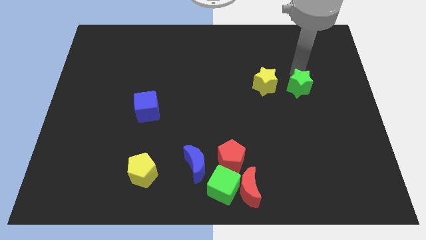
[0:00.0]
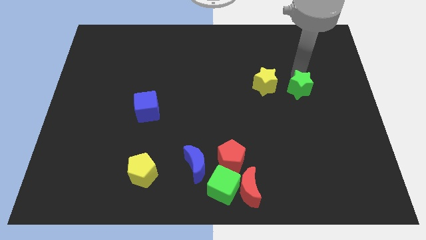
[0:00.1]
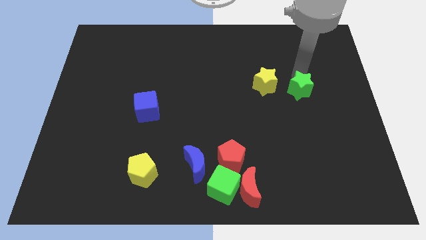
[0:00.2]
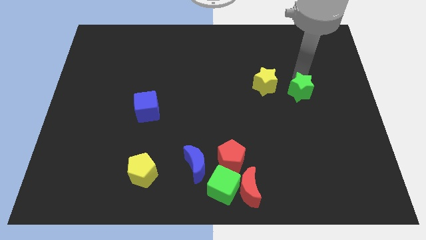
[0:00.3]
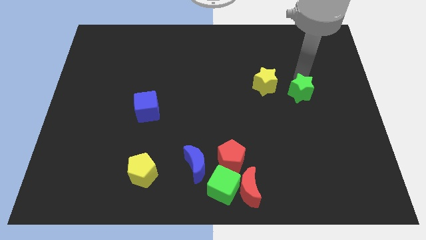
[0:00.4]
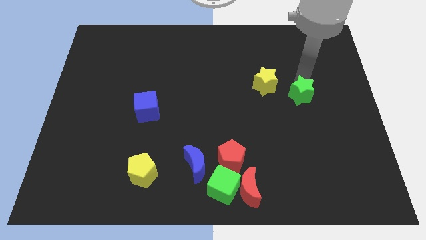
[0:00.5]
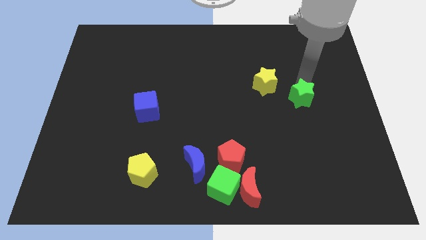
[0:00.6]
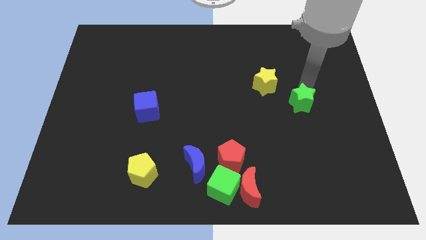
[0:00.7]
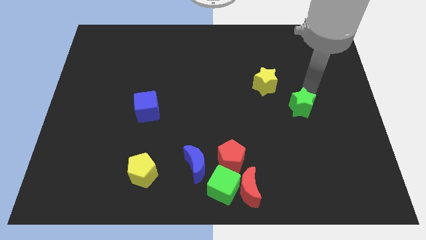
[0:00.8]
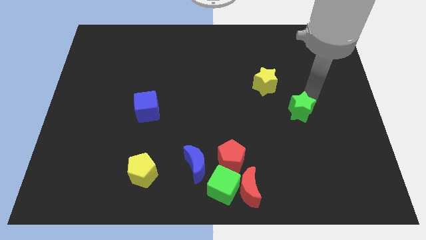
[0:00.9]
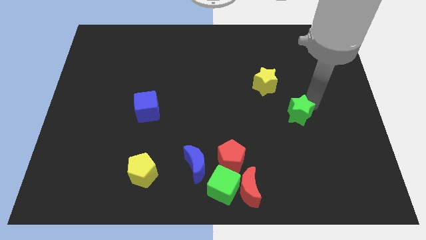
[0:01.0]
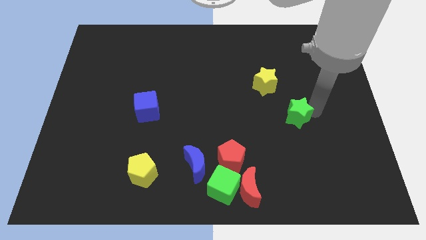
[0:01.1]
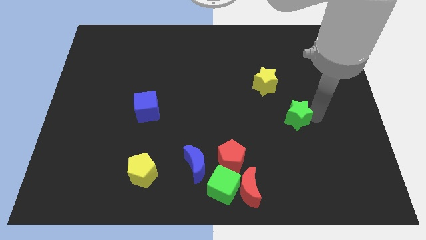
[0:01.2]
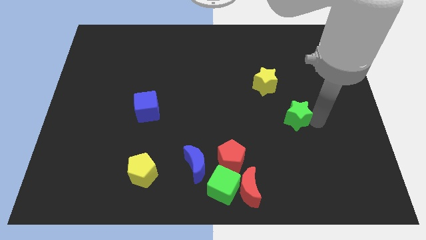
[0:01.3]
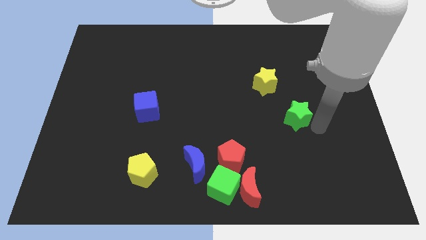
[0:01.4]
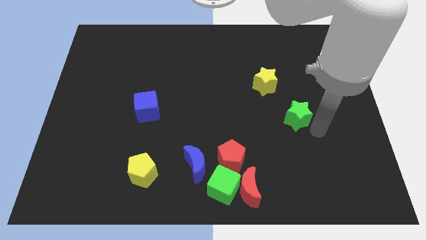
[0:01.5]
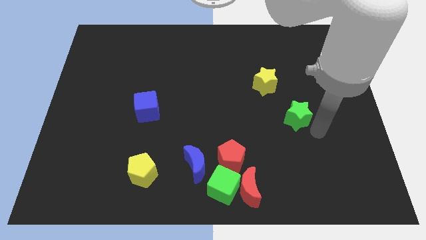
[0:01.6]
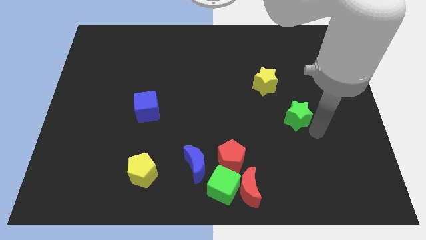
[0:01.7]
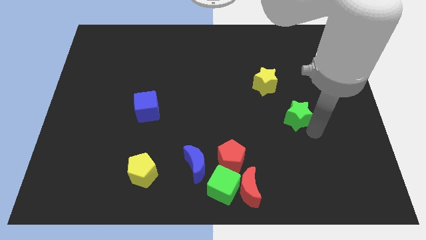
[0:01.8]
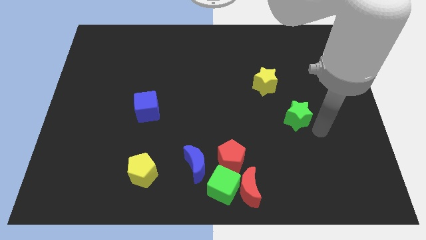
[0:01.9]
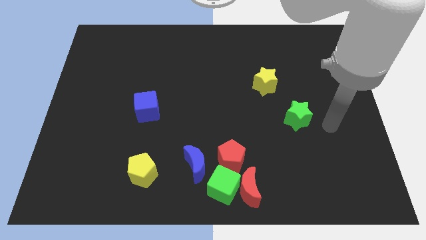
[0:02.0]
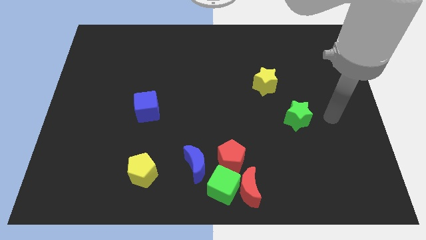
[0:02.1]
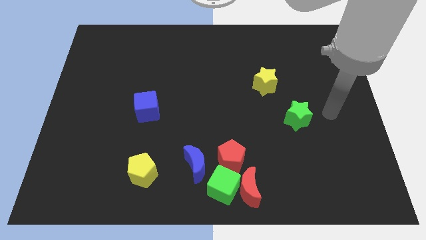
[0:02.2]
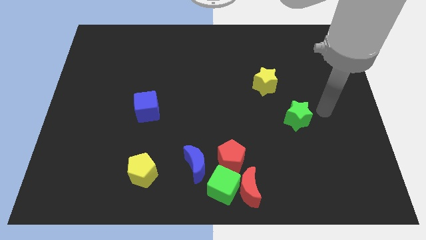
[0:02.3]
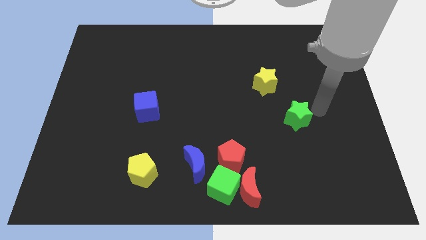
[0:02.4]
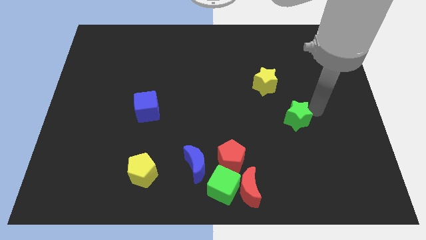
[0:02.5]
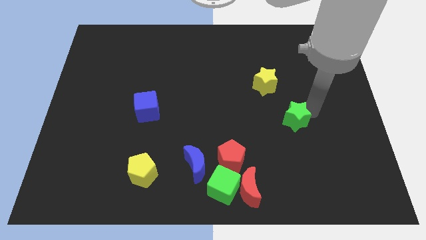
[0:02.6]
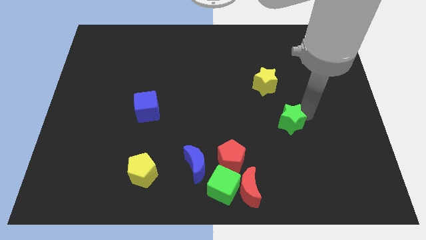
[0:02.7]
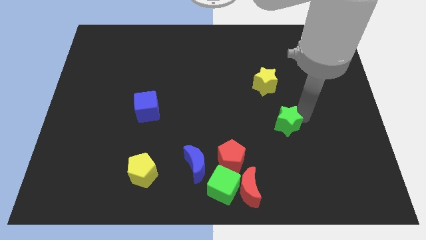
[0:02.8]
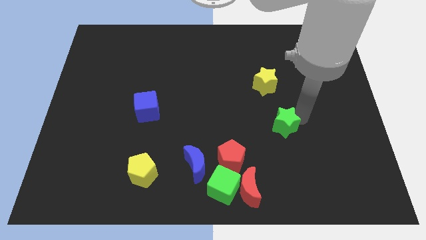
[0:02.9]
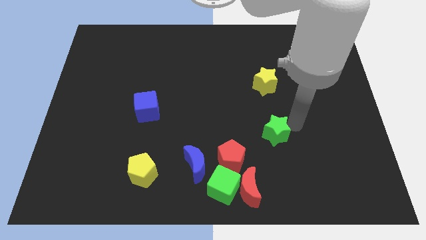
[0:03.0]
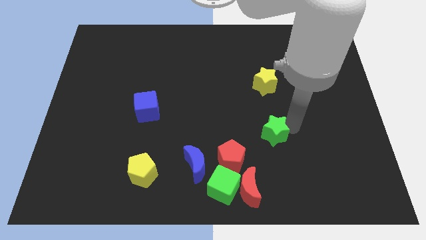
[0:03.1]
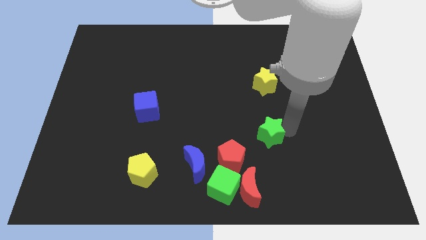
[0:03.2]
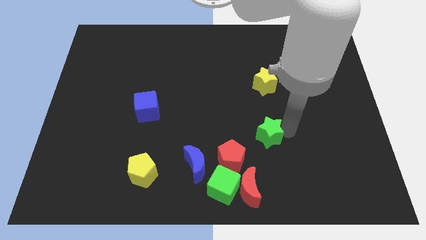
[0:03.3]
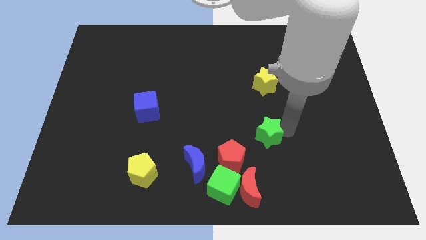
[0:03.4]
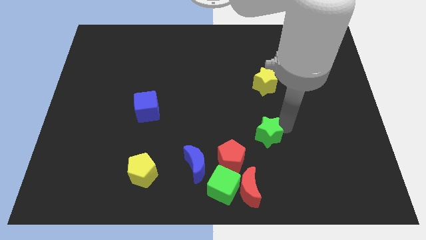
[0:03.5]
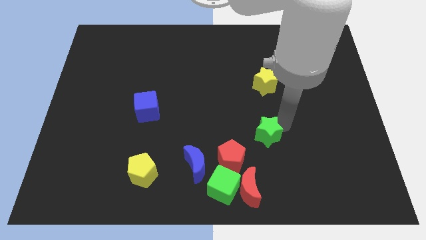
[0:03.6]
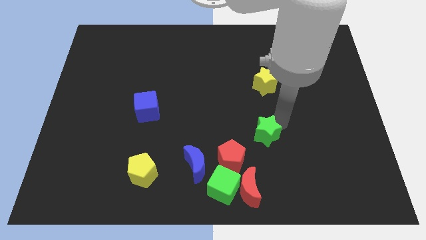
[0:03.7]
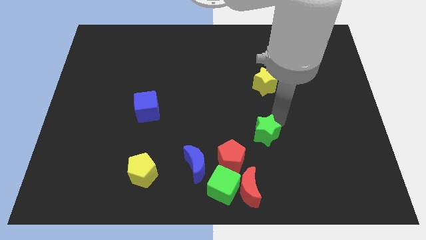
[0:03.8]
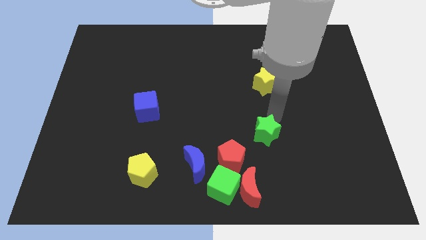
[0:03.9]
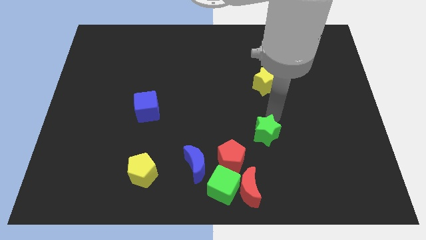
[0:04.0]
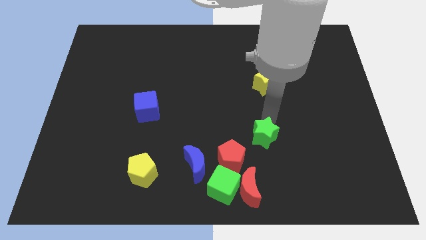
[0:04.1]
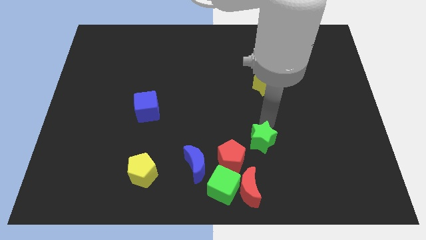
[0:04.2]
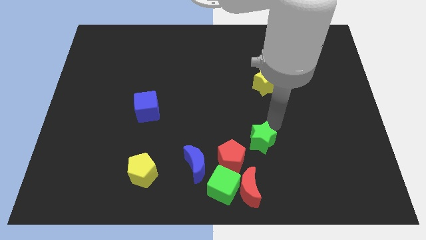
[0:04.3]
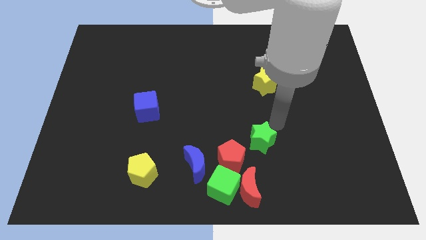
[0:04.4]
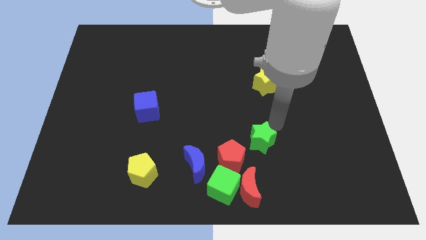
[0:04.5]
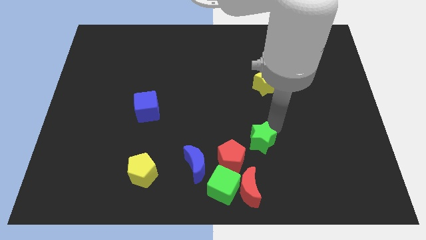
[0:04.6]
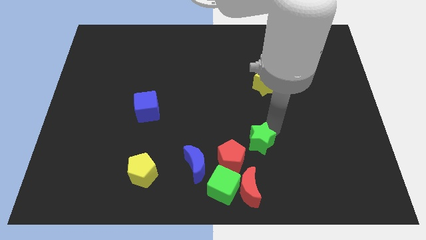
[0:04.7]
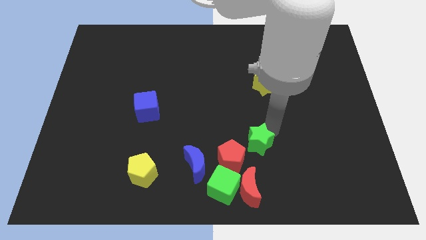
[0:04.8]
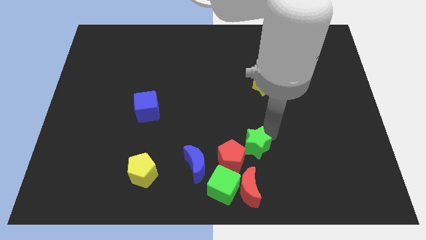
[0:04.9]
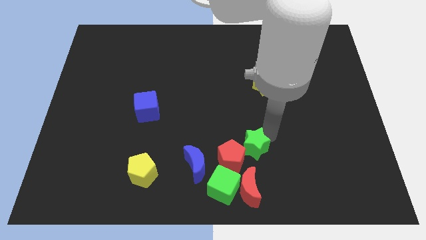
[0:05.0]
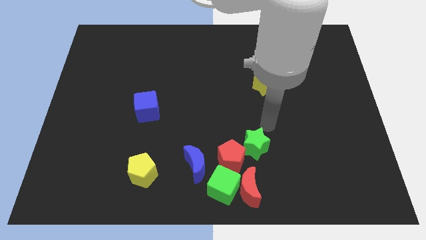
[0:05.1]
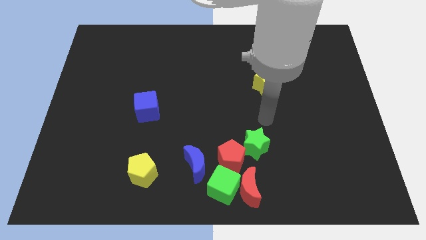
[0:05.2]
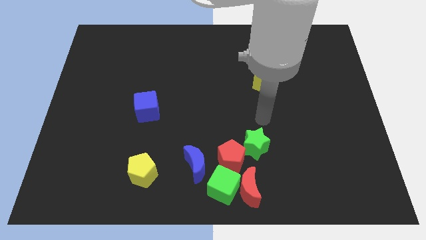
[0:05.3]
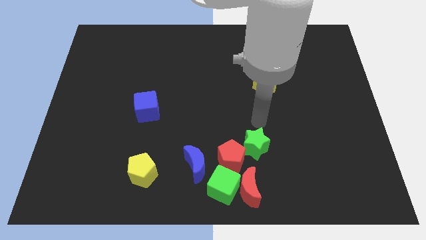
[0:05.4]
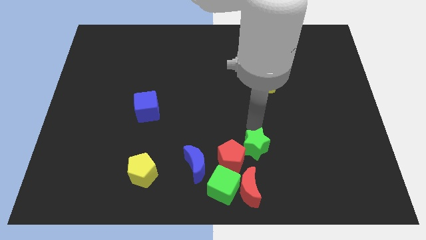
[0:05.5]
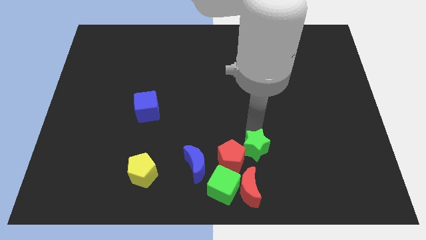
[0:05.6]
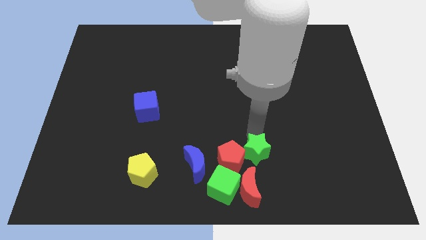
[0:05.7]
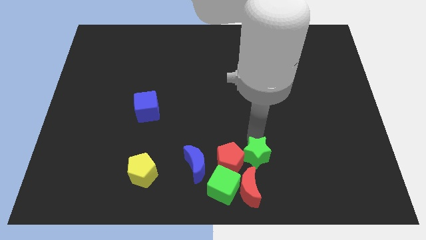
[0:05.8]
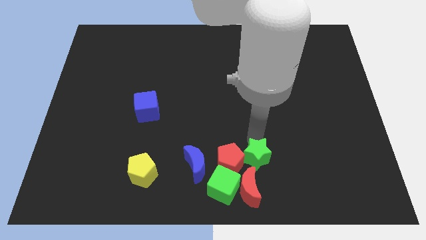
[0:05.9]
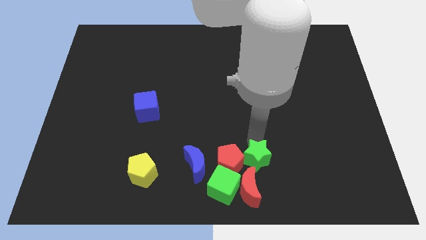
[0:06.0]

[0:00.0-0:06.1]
push green star into red pentagon

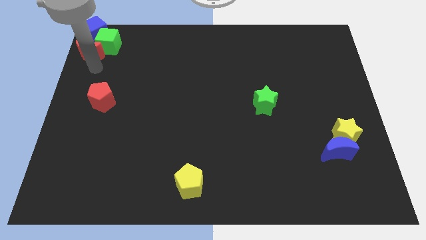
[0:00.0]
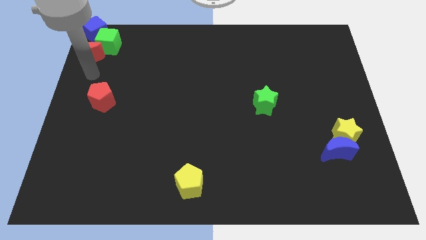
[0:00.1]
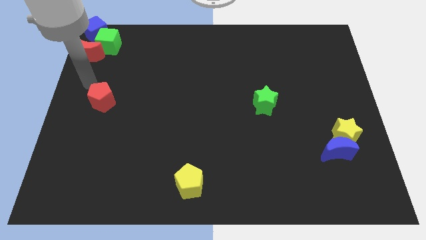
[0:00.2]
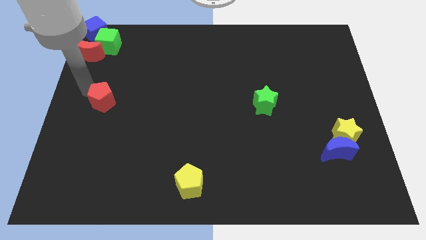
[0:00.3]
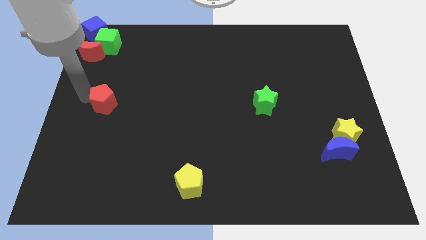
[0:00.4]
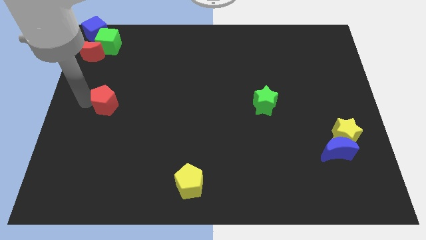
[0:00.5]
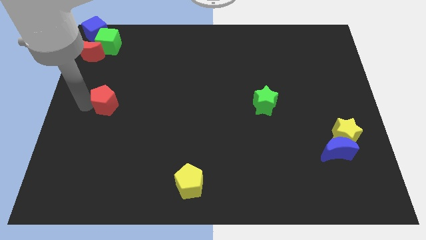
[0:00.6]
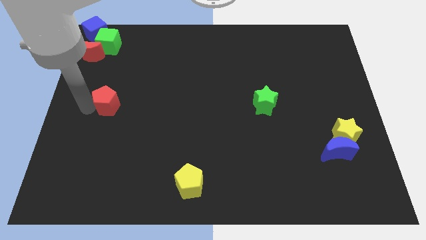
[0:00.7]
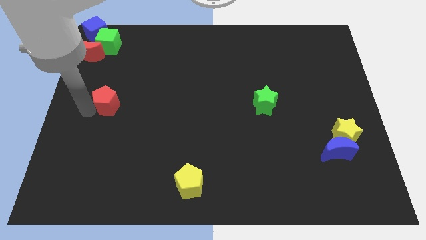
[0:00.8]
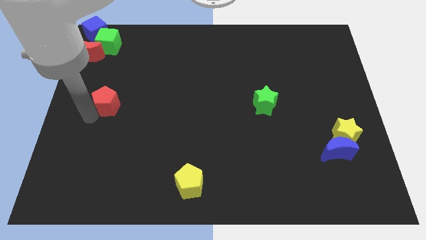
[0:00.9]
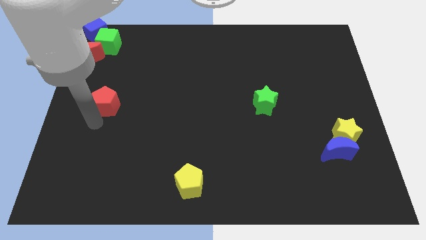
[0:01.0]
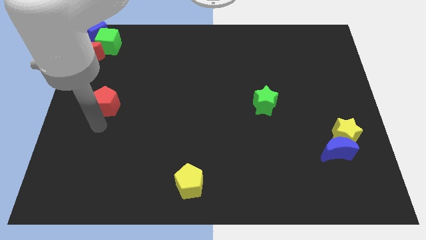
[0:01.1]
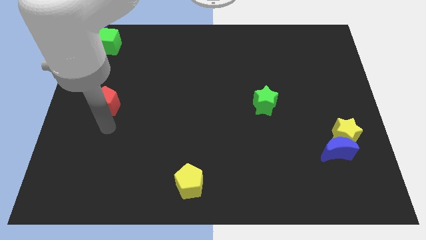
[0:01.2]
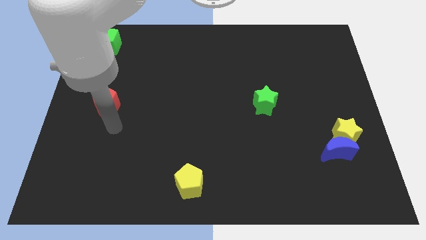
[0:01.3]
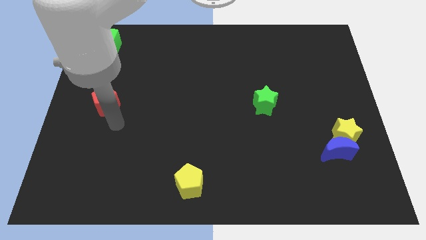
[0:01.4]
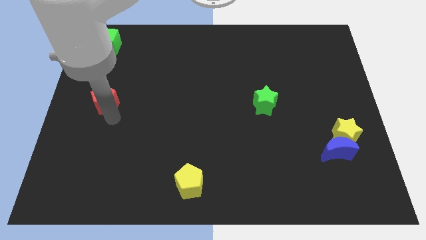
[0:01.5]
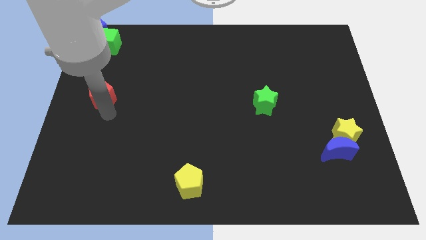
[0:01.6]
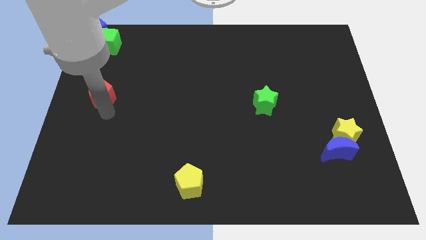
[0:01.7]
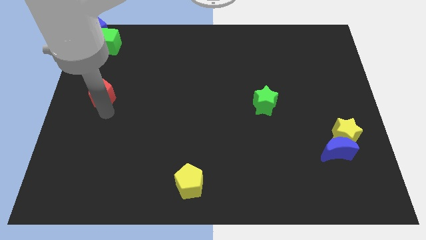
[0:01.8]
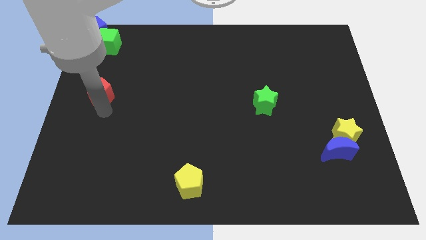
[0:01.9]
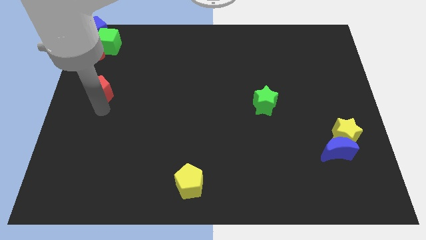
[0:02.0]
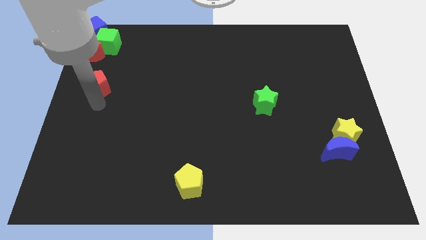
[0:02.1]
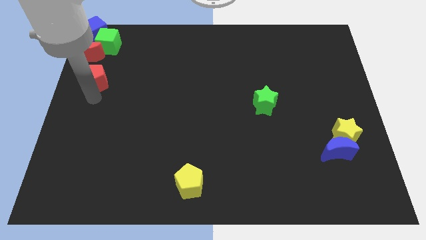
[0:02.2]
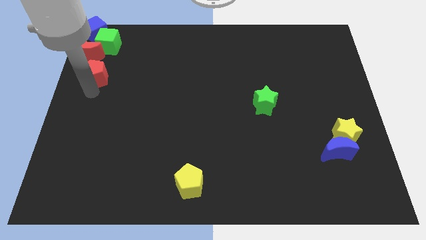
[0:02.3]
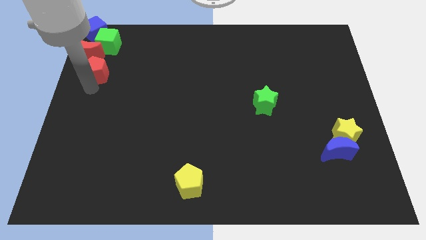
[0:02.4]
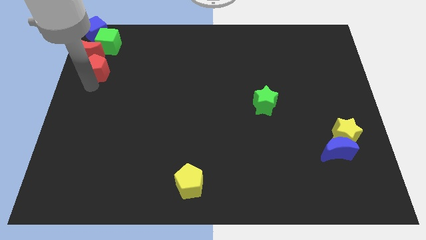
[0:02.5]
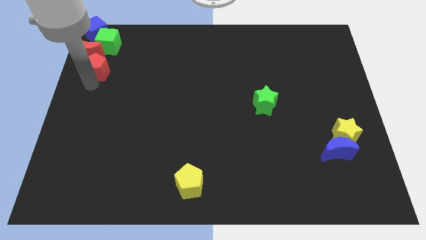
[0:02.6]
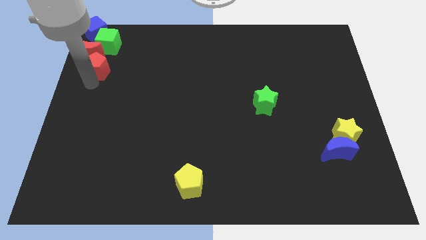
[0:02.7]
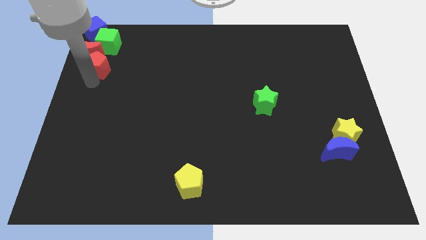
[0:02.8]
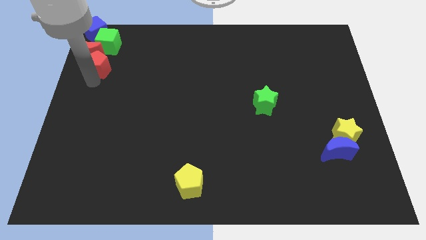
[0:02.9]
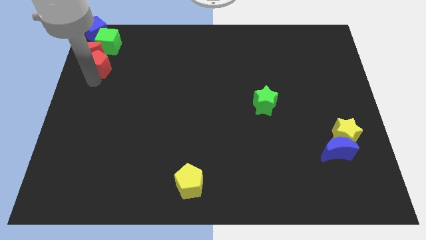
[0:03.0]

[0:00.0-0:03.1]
move the red pentagon close to the bottom side of the red crescent
